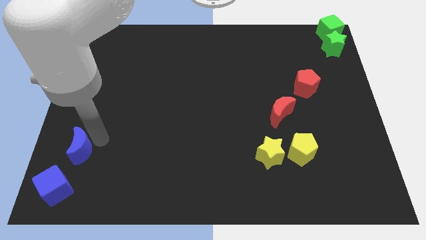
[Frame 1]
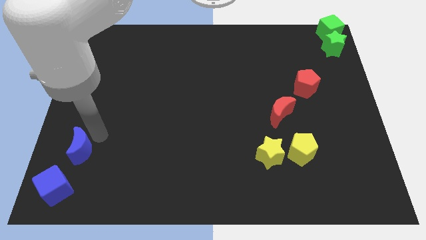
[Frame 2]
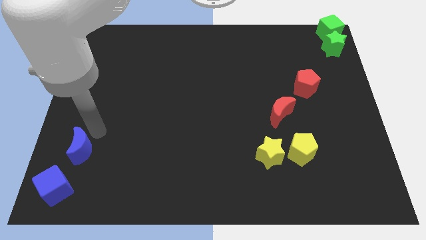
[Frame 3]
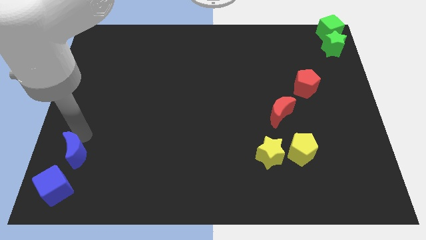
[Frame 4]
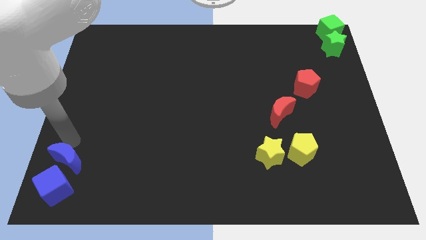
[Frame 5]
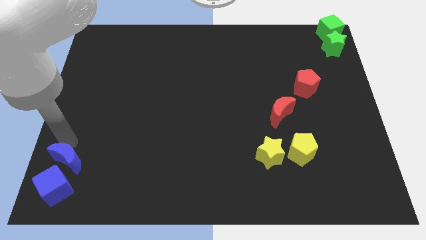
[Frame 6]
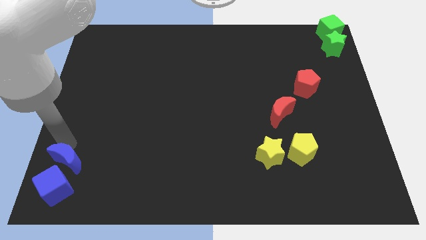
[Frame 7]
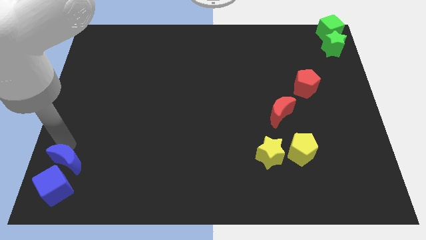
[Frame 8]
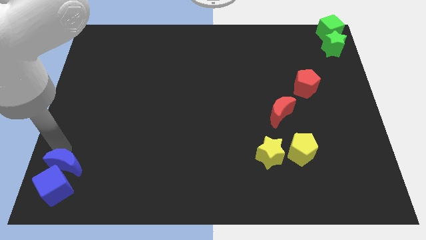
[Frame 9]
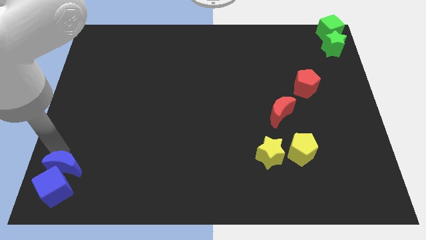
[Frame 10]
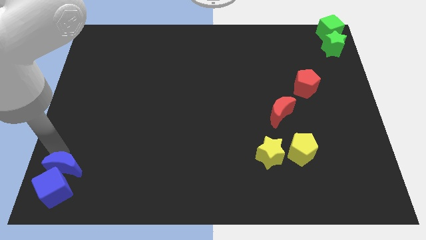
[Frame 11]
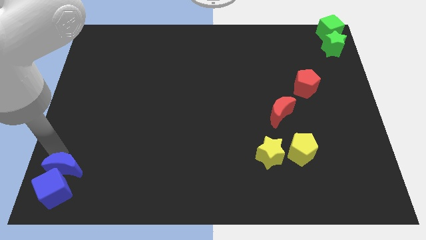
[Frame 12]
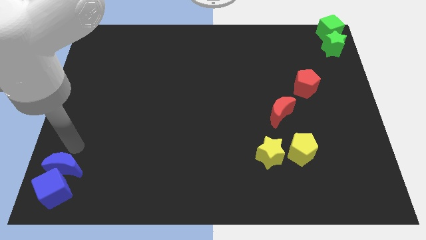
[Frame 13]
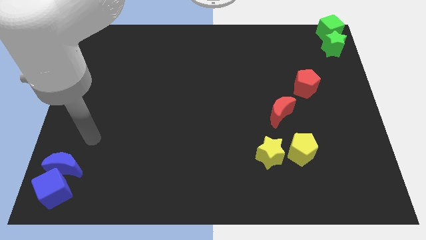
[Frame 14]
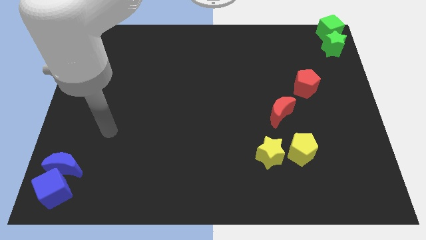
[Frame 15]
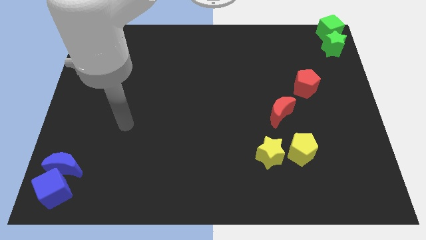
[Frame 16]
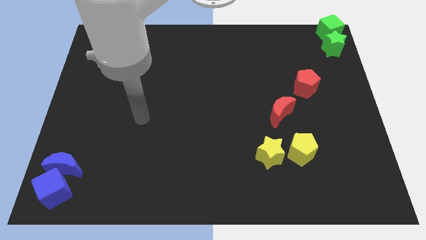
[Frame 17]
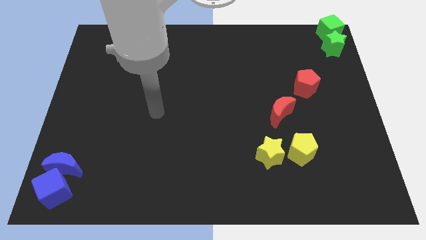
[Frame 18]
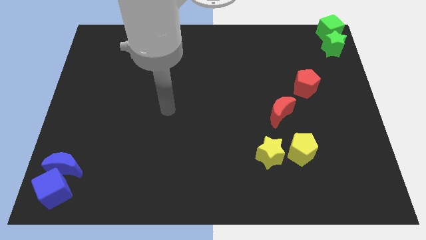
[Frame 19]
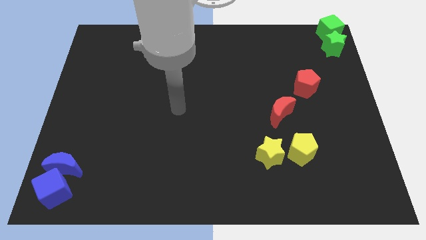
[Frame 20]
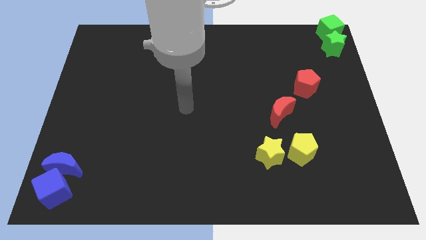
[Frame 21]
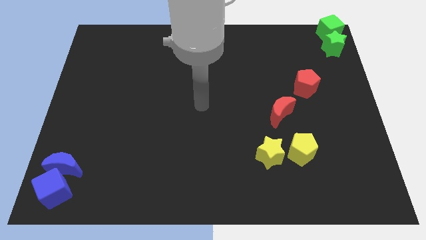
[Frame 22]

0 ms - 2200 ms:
move the blue moon above the blue cube

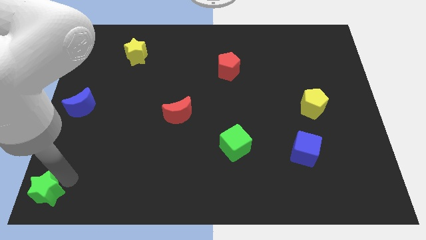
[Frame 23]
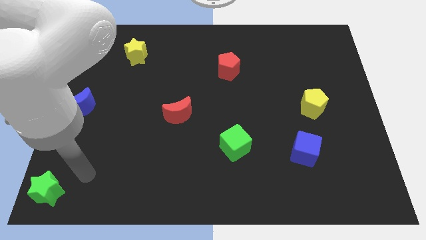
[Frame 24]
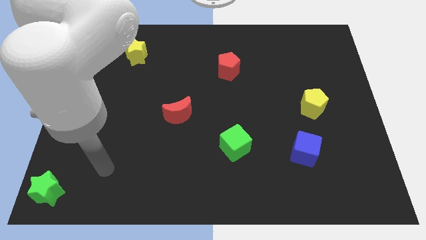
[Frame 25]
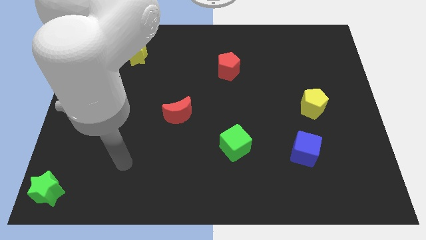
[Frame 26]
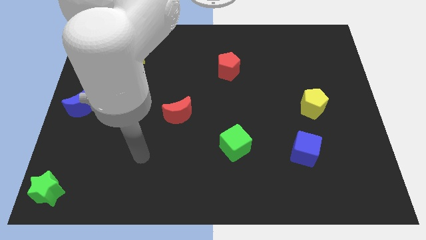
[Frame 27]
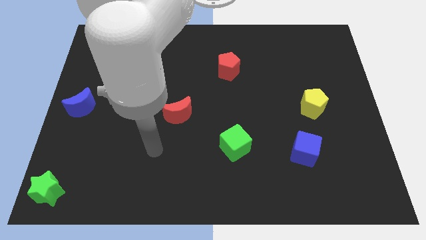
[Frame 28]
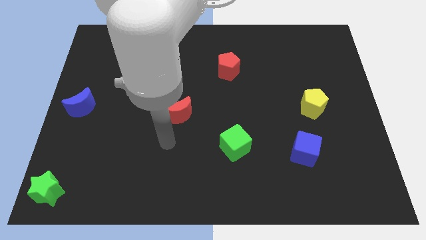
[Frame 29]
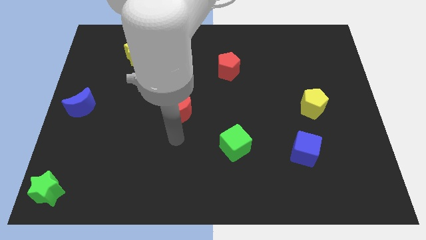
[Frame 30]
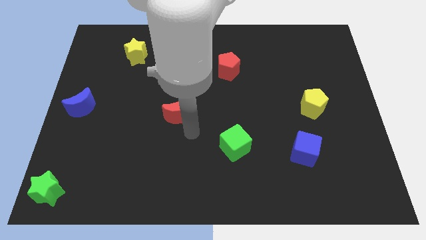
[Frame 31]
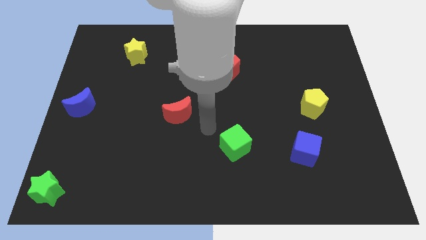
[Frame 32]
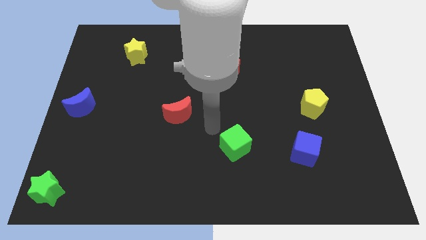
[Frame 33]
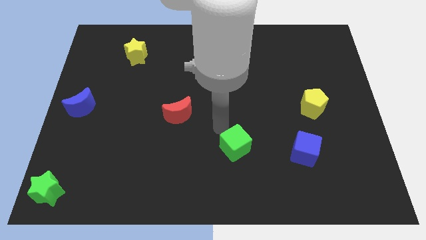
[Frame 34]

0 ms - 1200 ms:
move your arm away from the green star

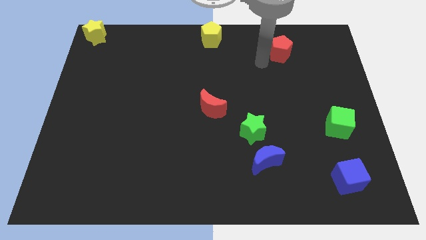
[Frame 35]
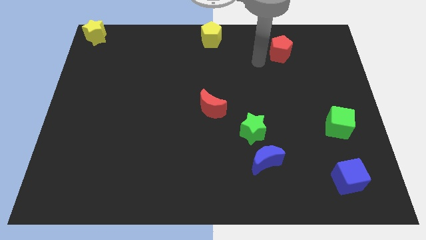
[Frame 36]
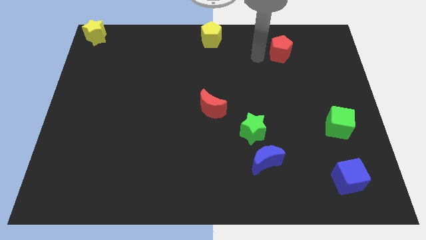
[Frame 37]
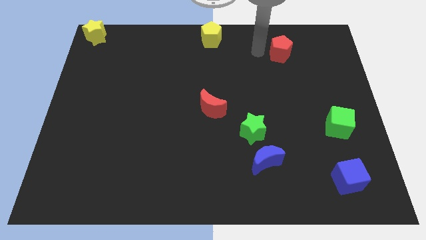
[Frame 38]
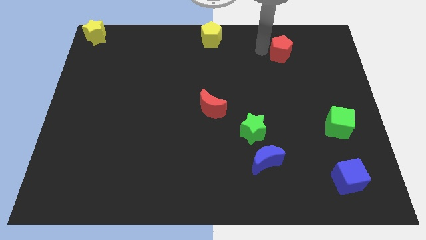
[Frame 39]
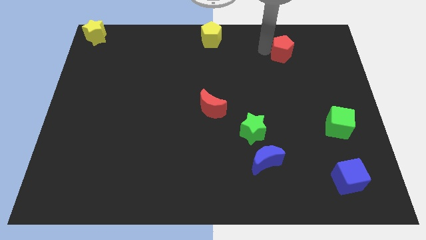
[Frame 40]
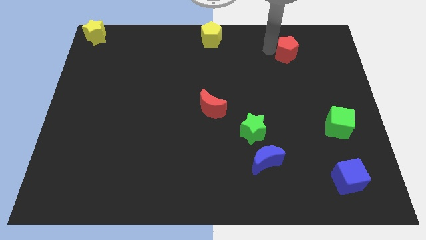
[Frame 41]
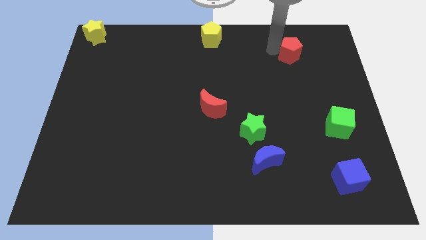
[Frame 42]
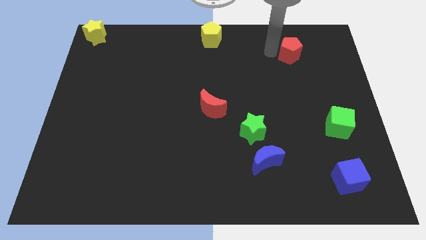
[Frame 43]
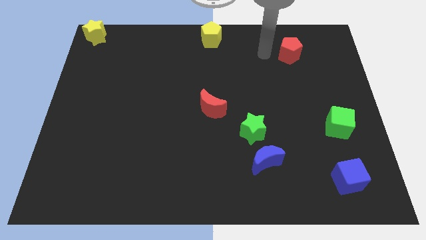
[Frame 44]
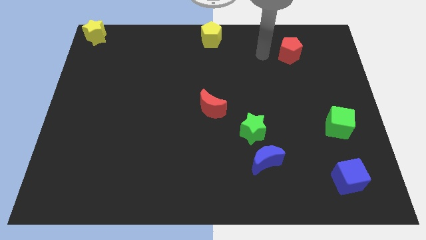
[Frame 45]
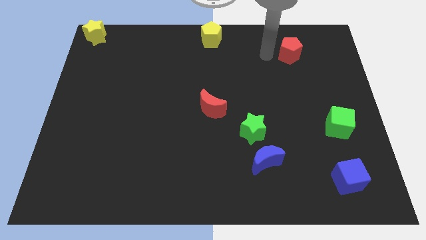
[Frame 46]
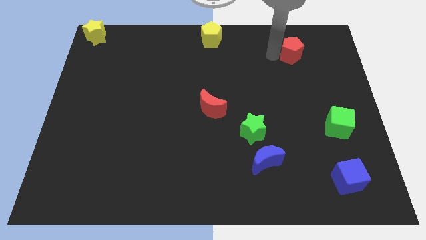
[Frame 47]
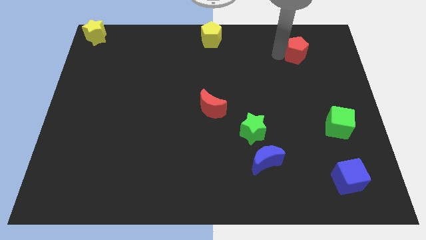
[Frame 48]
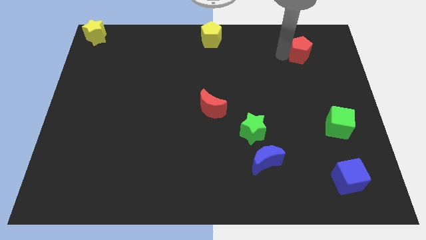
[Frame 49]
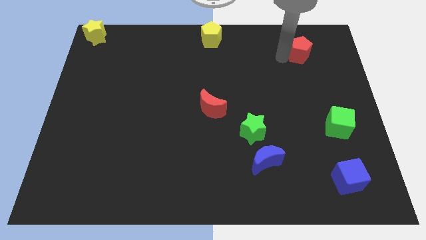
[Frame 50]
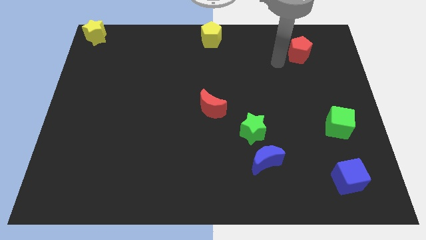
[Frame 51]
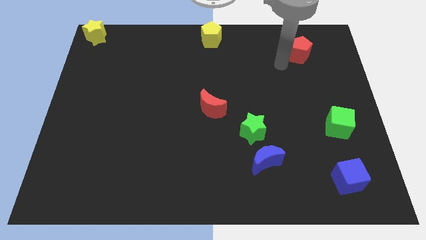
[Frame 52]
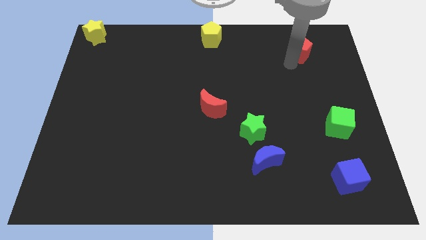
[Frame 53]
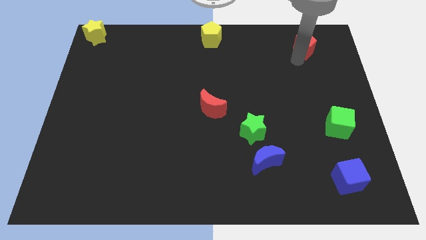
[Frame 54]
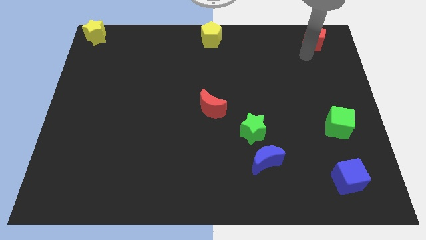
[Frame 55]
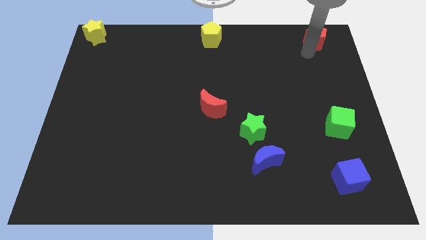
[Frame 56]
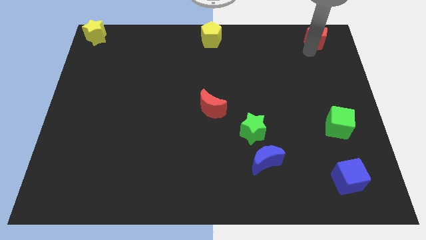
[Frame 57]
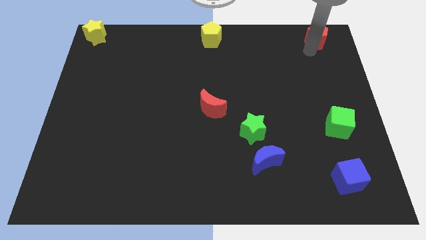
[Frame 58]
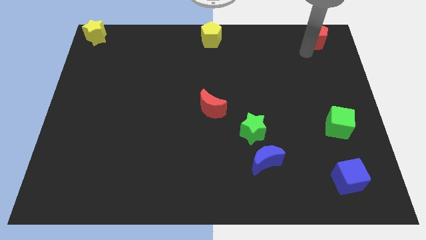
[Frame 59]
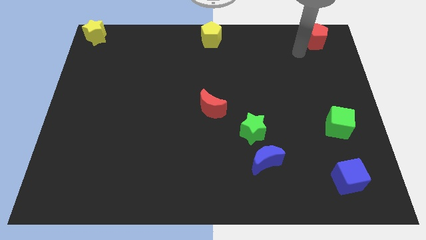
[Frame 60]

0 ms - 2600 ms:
place the red pentagon vertically at the top side of the green cube

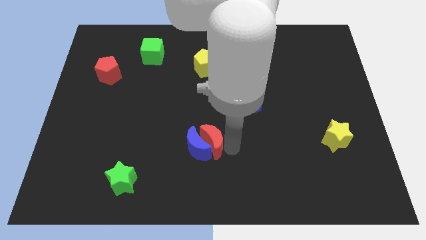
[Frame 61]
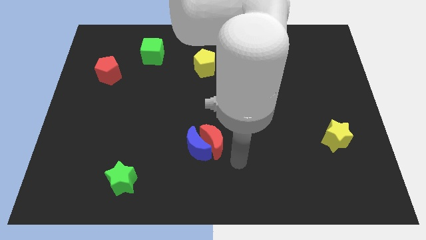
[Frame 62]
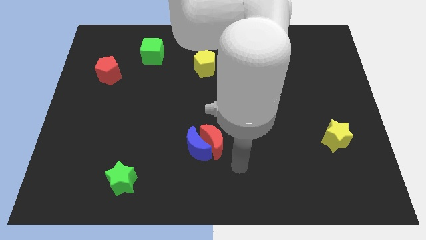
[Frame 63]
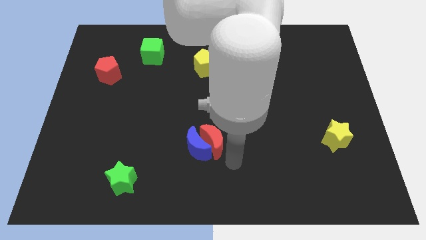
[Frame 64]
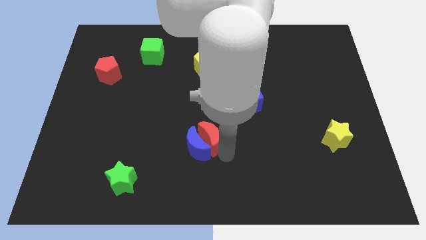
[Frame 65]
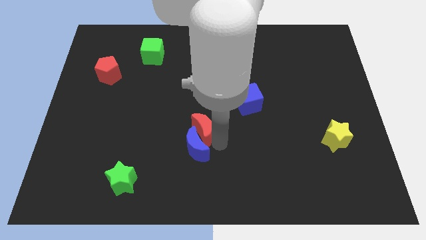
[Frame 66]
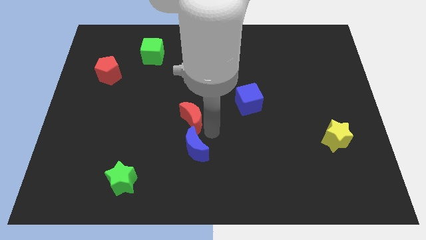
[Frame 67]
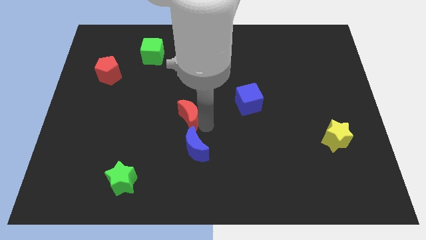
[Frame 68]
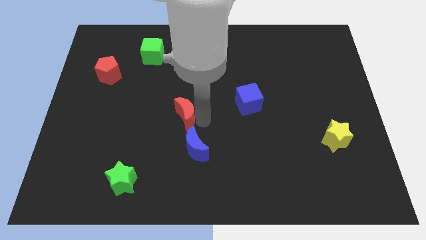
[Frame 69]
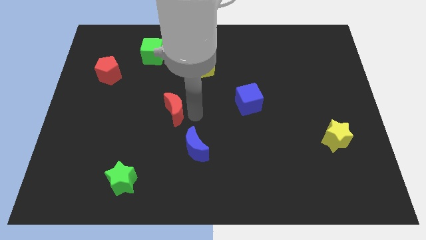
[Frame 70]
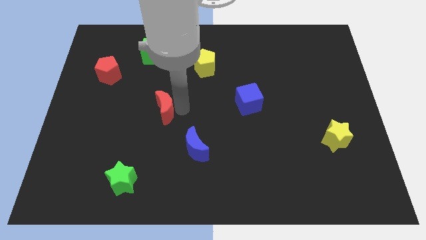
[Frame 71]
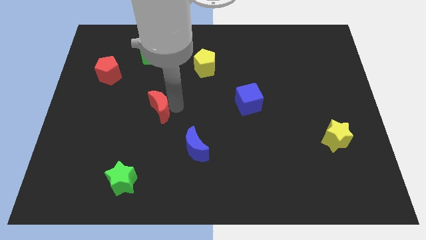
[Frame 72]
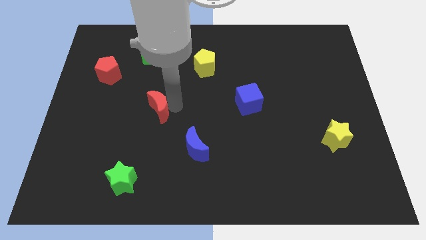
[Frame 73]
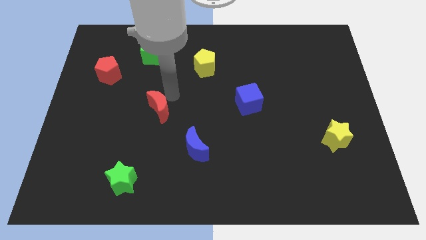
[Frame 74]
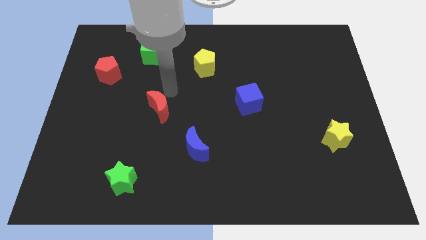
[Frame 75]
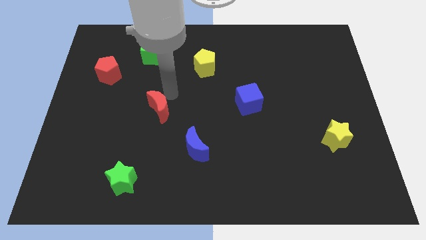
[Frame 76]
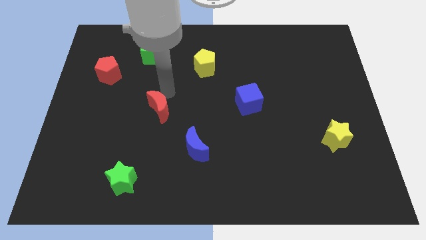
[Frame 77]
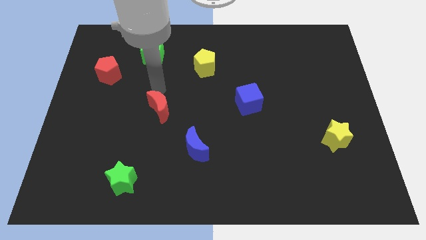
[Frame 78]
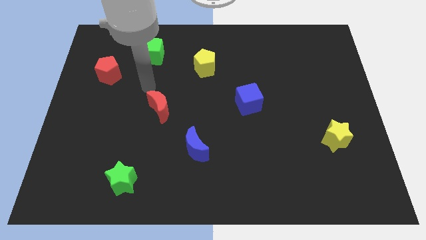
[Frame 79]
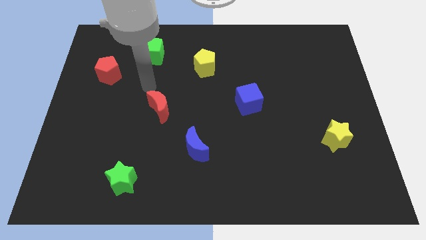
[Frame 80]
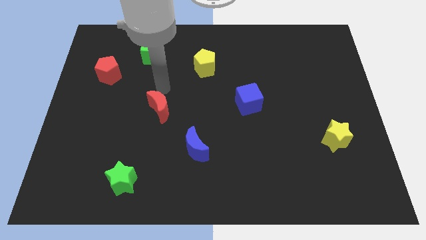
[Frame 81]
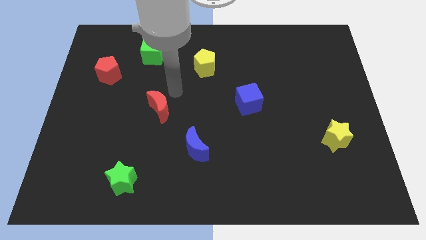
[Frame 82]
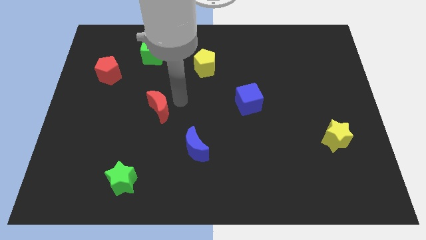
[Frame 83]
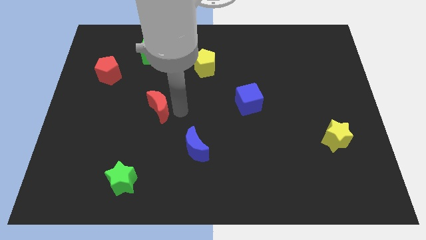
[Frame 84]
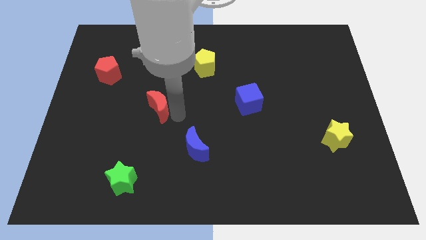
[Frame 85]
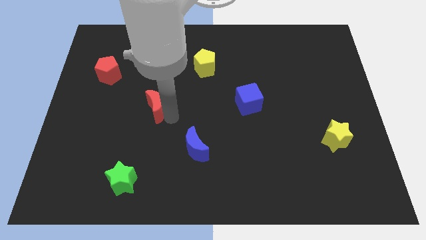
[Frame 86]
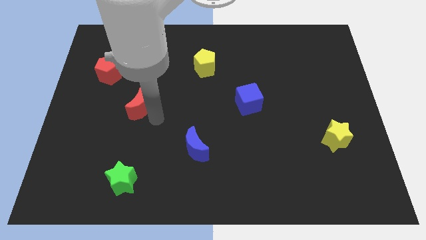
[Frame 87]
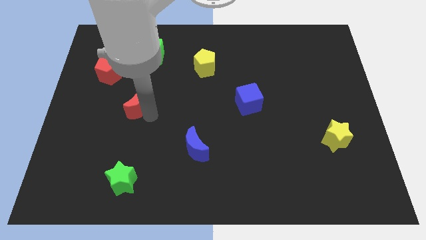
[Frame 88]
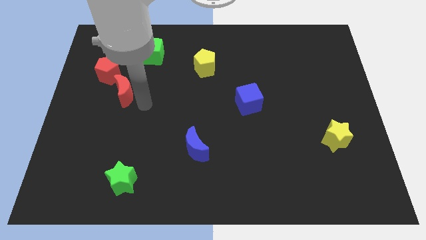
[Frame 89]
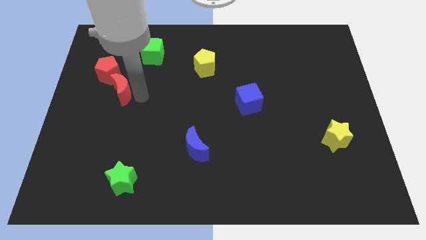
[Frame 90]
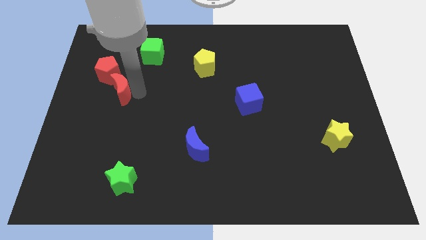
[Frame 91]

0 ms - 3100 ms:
drag the red crescent towards the bottom side of the red pentagon
